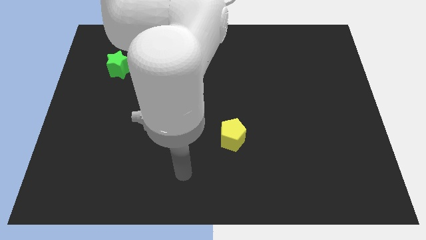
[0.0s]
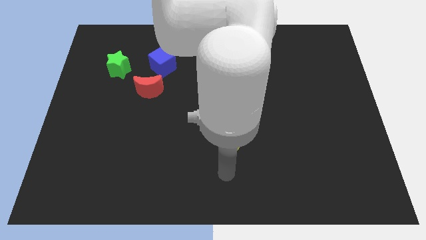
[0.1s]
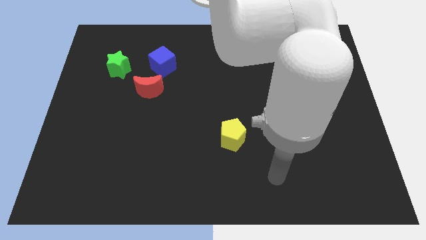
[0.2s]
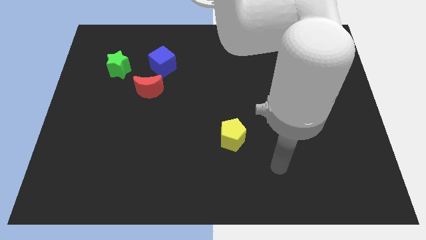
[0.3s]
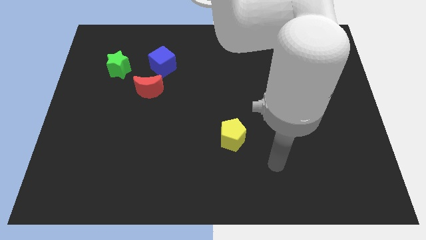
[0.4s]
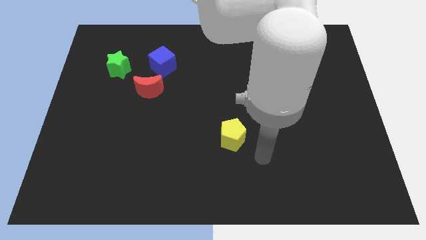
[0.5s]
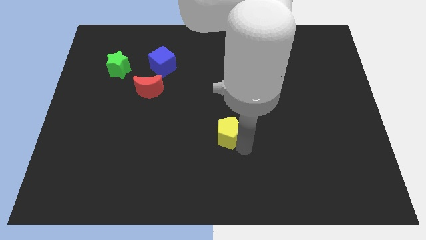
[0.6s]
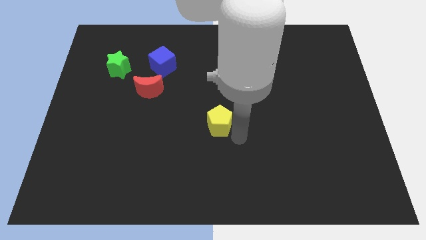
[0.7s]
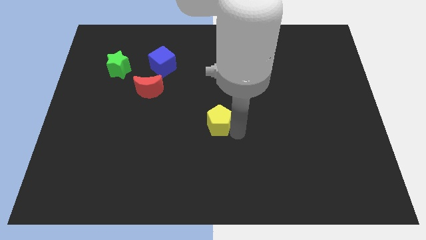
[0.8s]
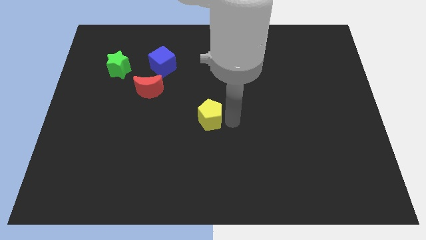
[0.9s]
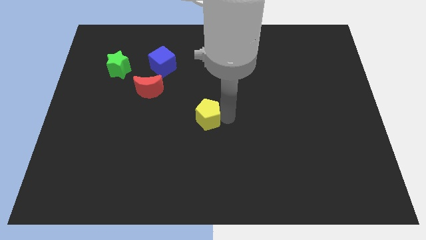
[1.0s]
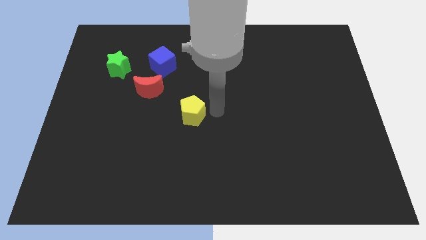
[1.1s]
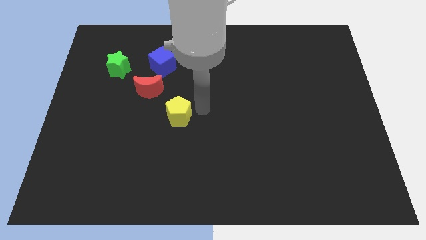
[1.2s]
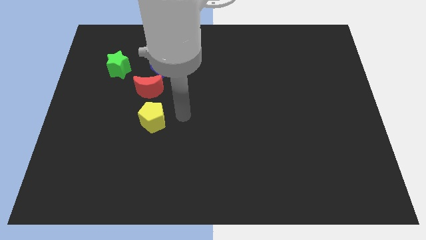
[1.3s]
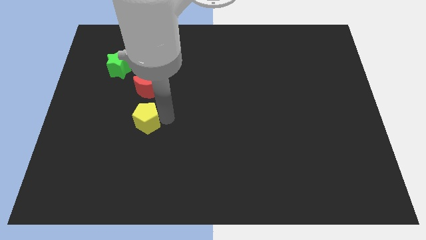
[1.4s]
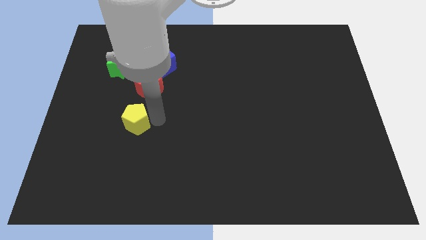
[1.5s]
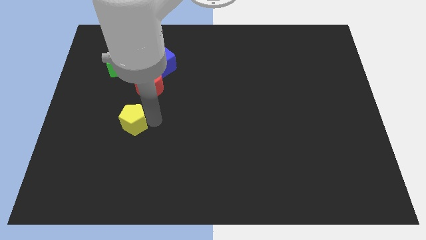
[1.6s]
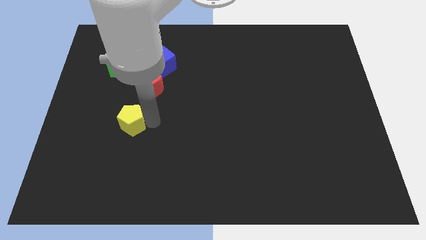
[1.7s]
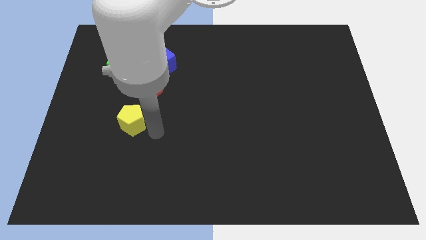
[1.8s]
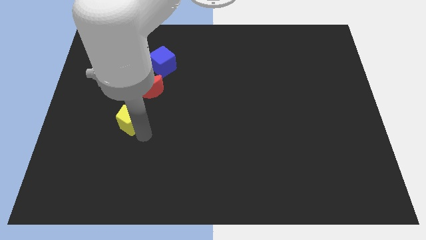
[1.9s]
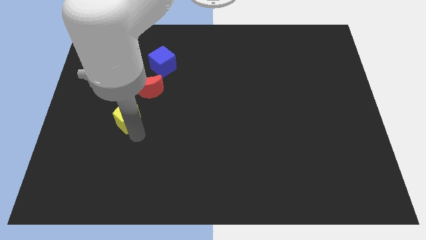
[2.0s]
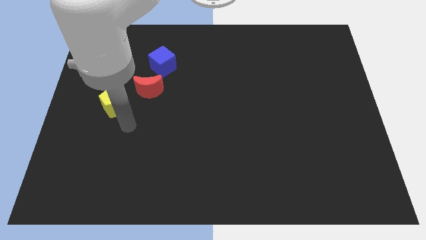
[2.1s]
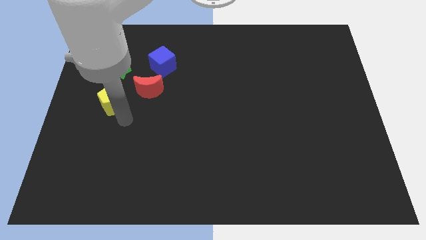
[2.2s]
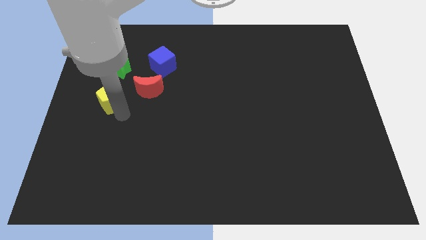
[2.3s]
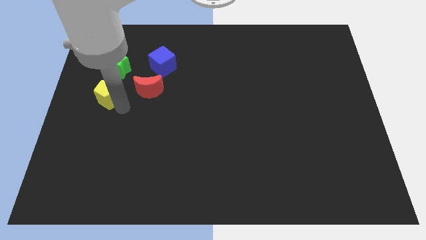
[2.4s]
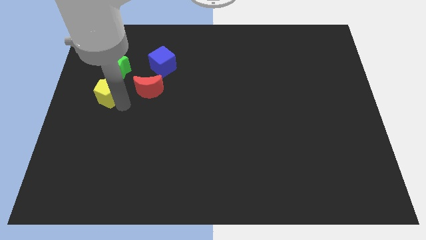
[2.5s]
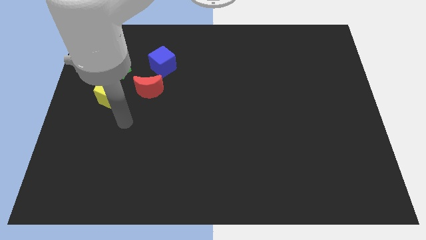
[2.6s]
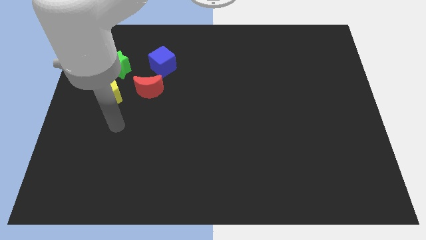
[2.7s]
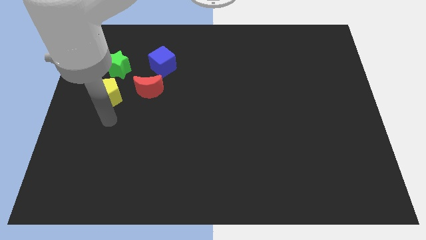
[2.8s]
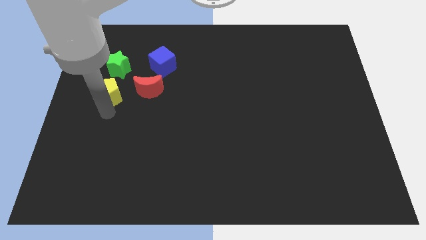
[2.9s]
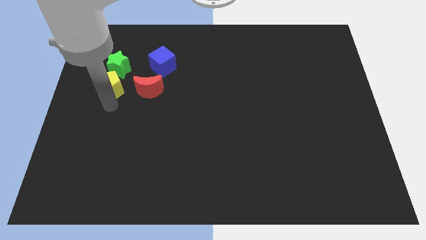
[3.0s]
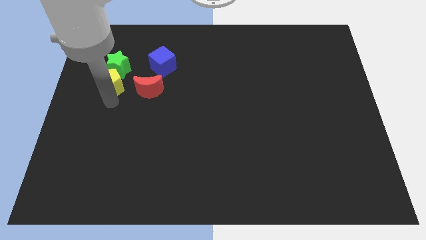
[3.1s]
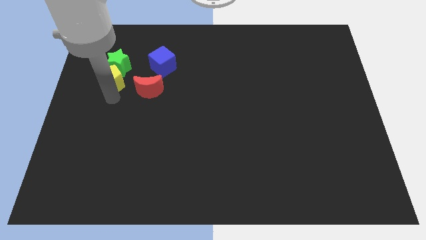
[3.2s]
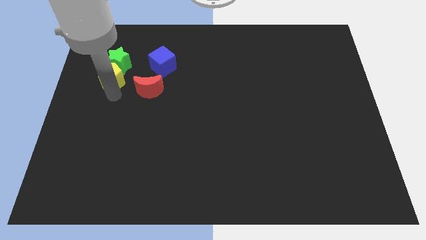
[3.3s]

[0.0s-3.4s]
push the yellow pentagon close to the green block

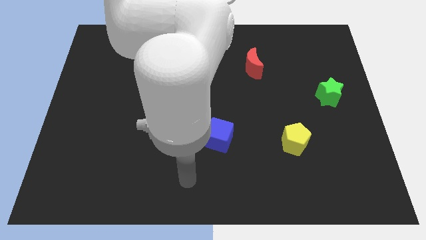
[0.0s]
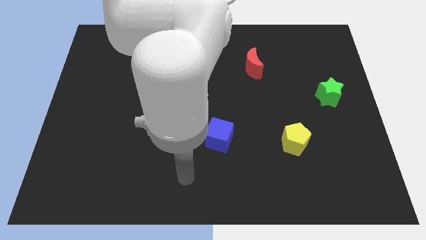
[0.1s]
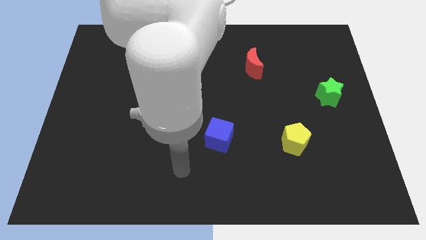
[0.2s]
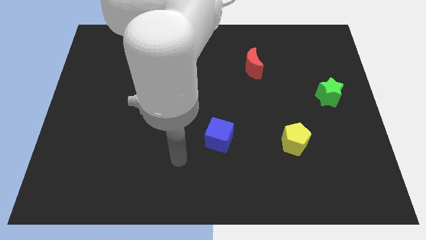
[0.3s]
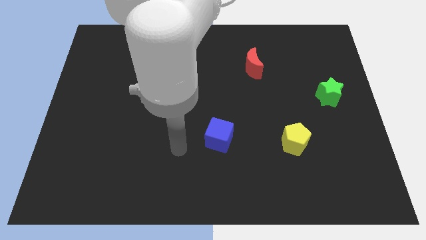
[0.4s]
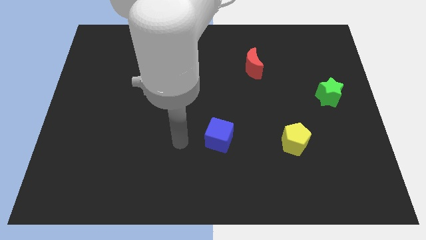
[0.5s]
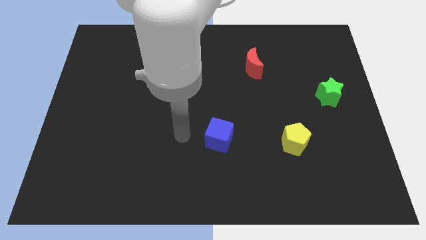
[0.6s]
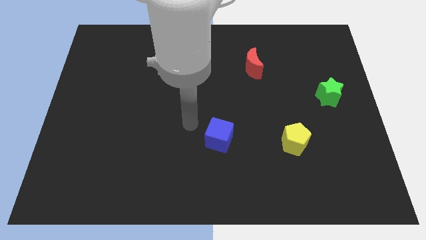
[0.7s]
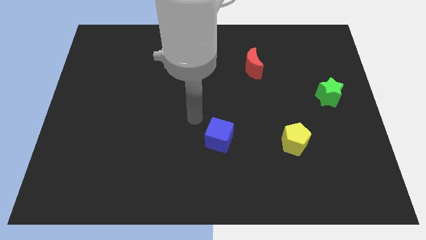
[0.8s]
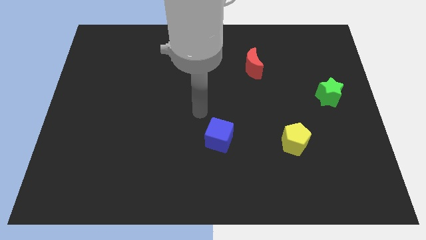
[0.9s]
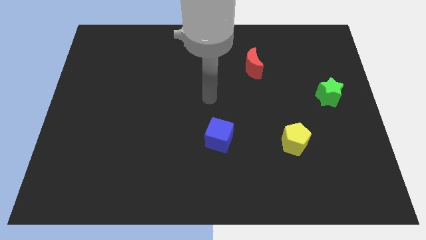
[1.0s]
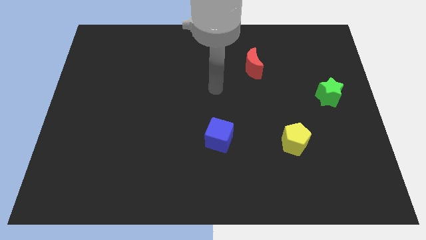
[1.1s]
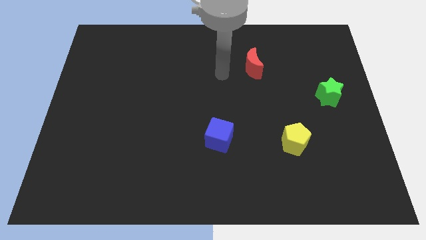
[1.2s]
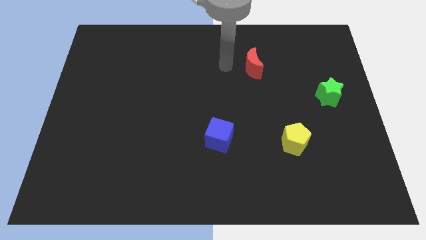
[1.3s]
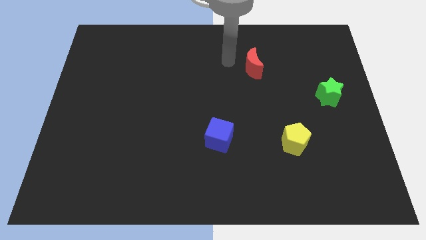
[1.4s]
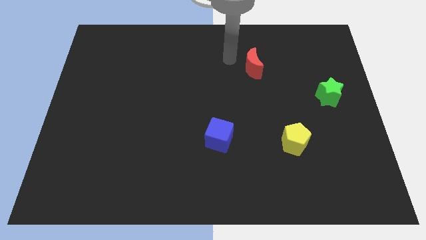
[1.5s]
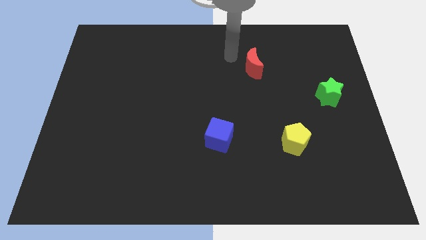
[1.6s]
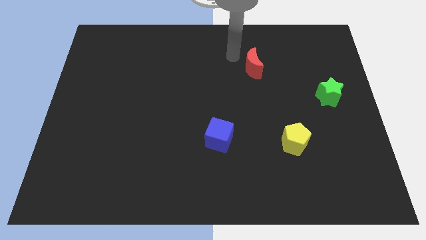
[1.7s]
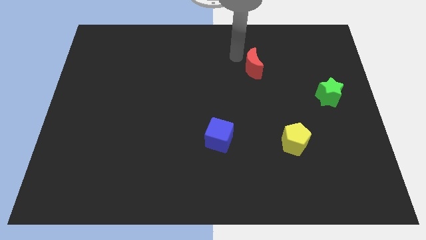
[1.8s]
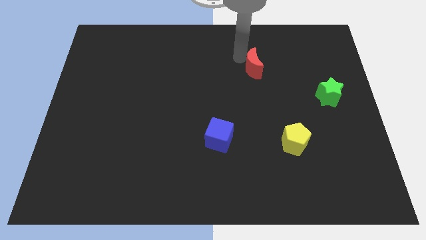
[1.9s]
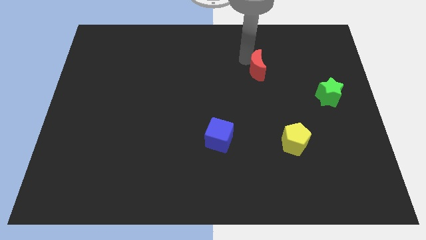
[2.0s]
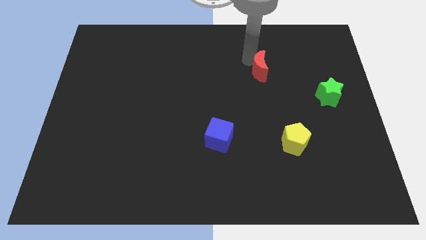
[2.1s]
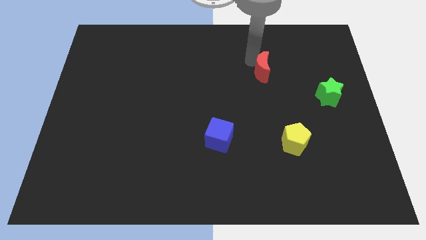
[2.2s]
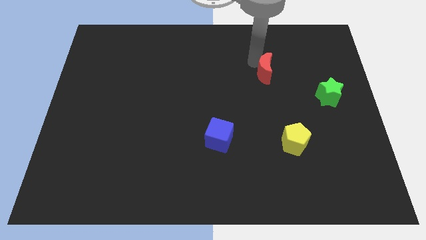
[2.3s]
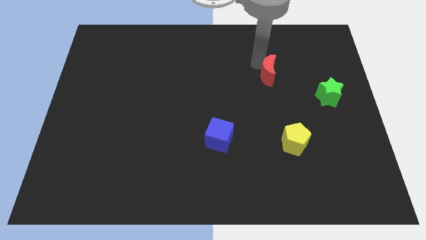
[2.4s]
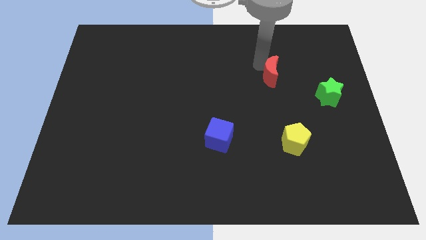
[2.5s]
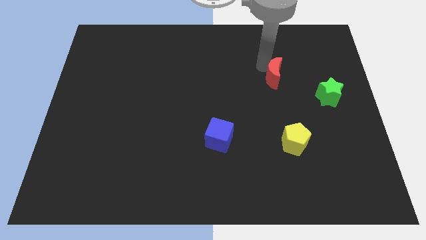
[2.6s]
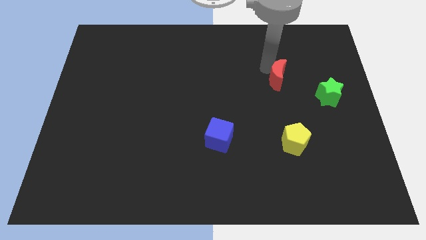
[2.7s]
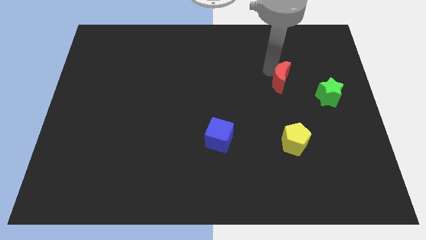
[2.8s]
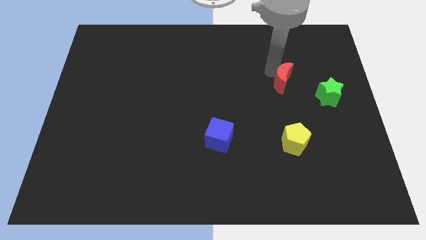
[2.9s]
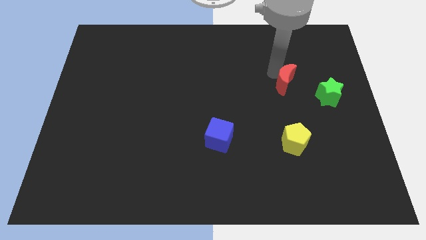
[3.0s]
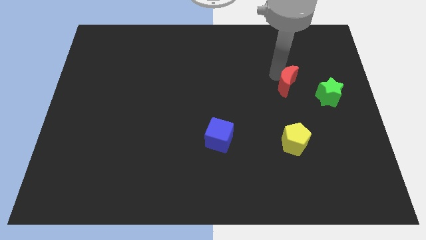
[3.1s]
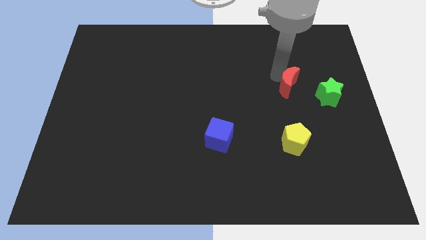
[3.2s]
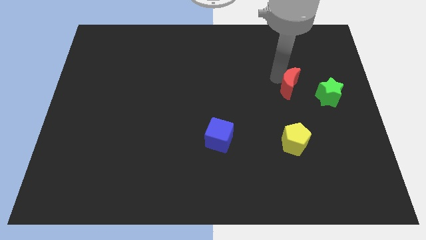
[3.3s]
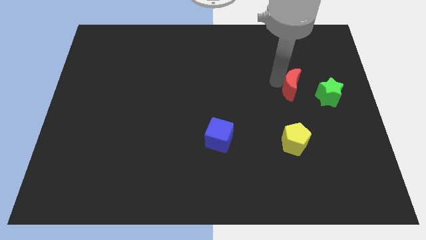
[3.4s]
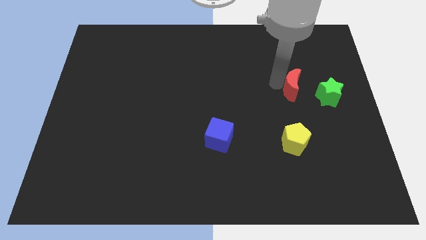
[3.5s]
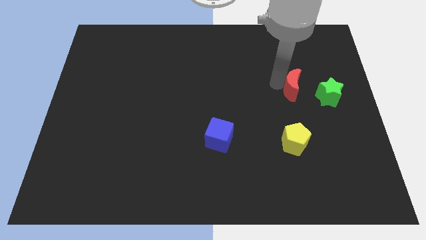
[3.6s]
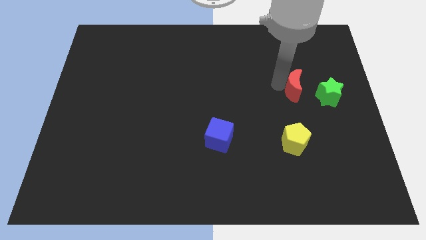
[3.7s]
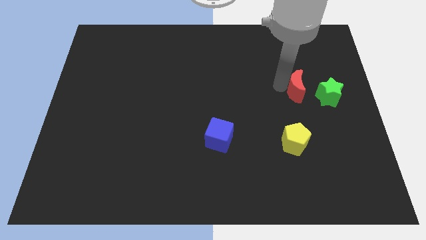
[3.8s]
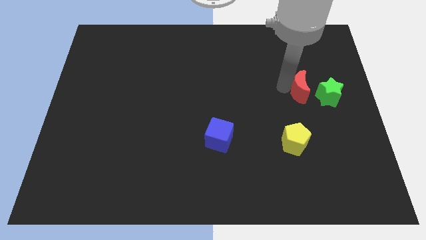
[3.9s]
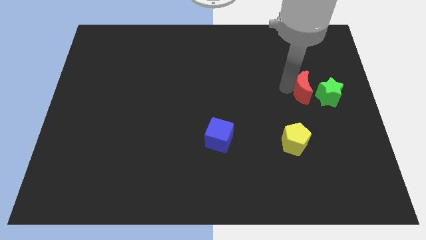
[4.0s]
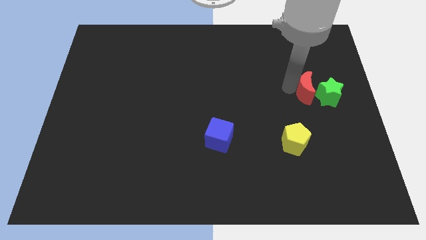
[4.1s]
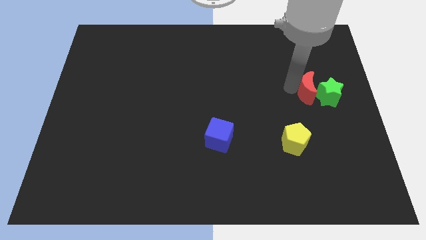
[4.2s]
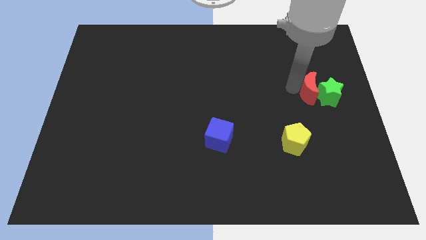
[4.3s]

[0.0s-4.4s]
slide the red block close to the green block

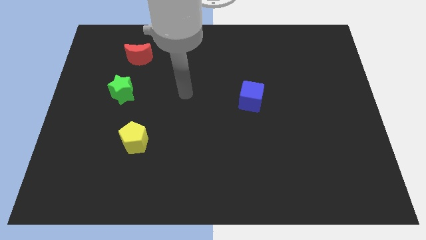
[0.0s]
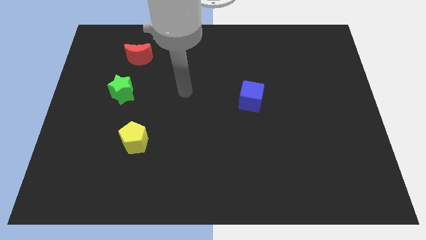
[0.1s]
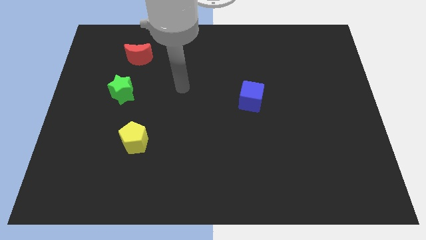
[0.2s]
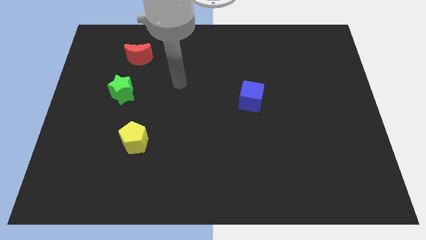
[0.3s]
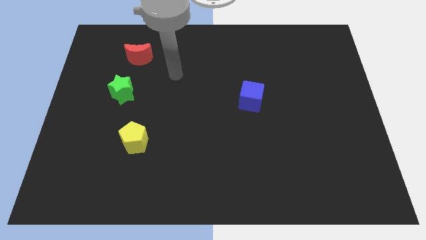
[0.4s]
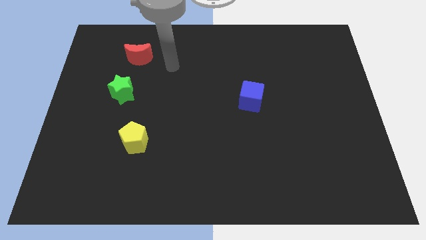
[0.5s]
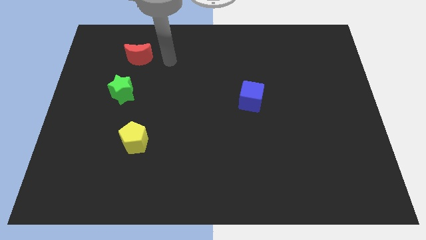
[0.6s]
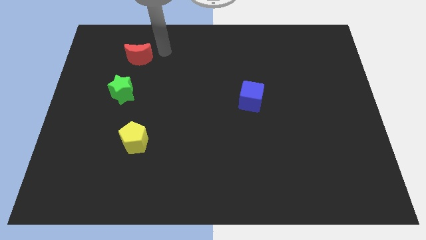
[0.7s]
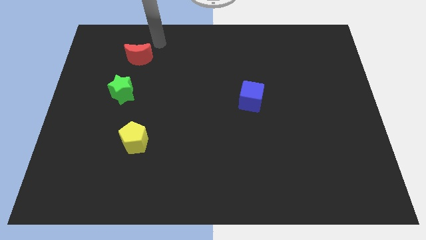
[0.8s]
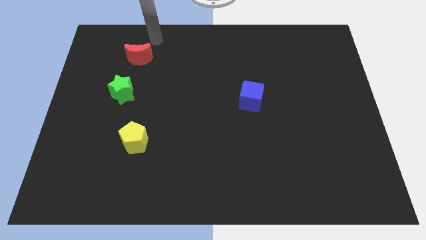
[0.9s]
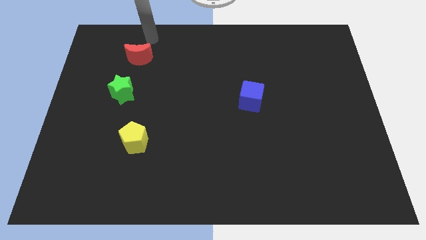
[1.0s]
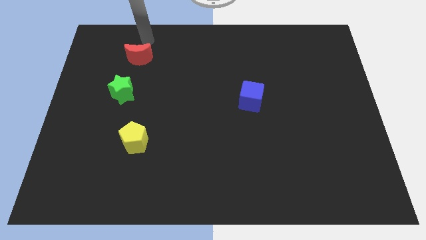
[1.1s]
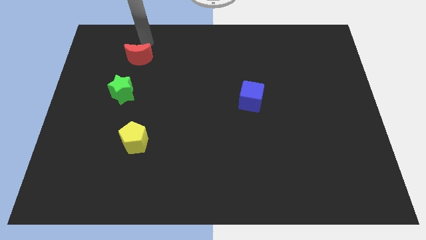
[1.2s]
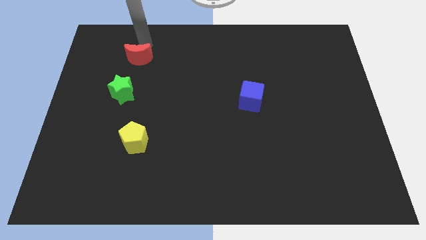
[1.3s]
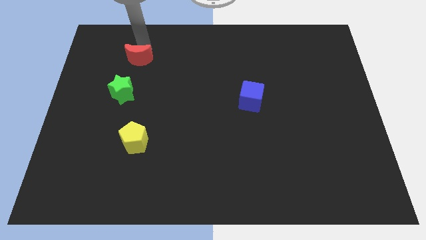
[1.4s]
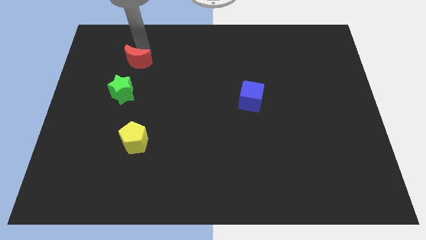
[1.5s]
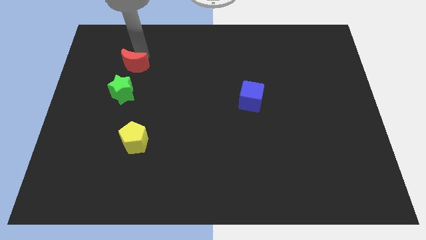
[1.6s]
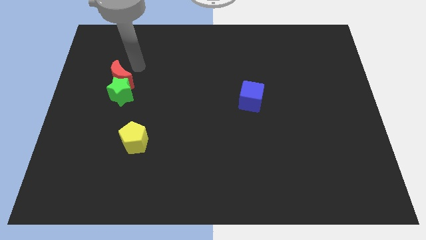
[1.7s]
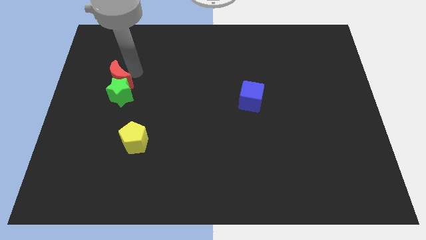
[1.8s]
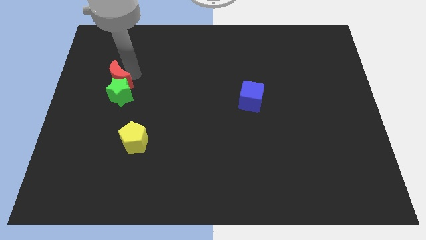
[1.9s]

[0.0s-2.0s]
move the red block towards the star
